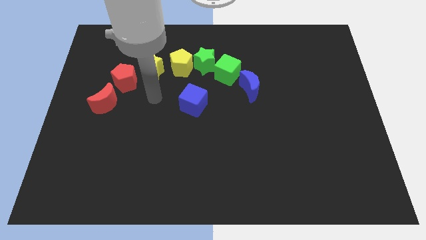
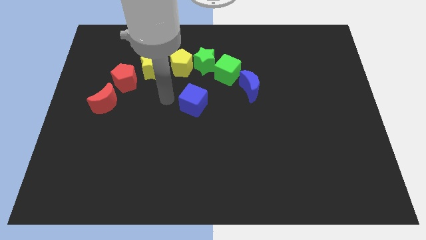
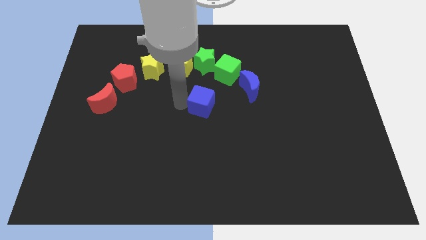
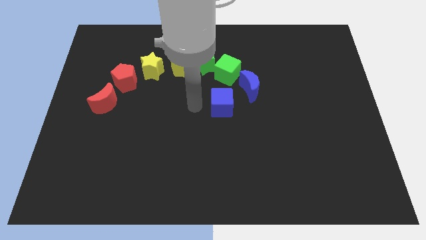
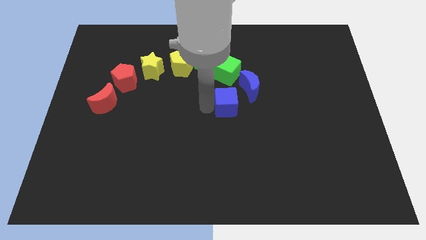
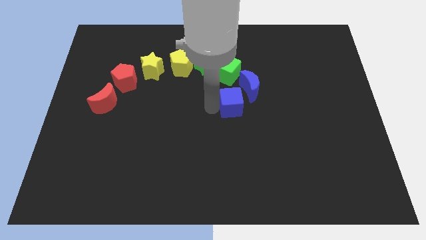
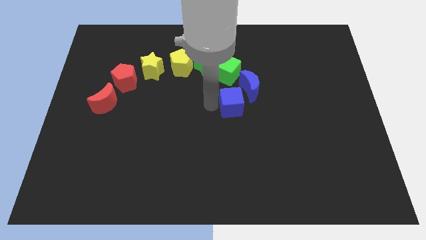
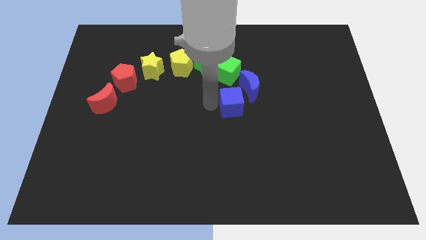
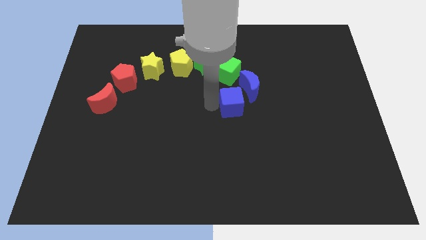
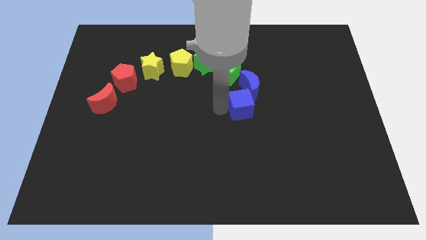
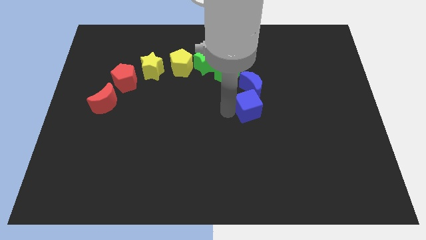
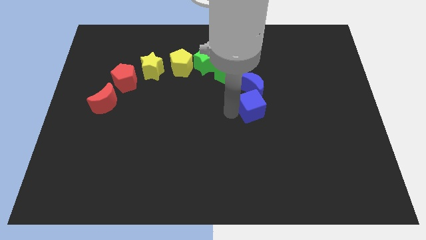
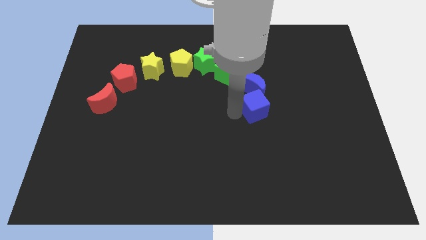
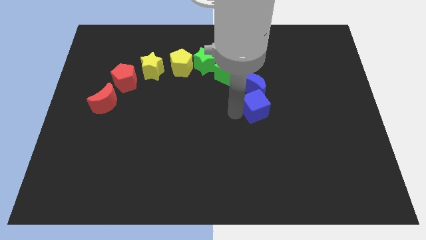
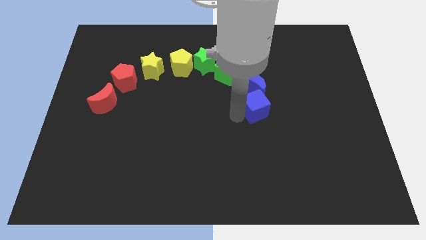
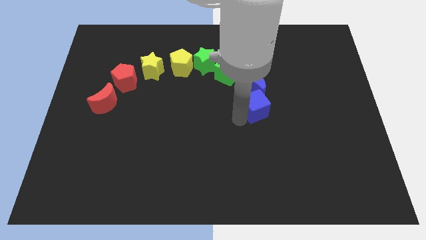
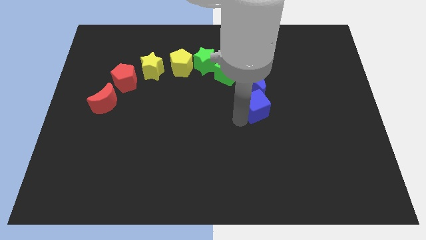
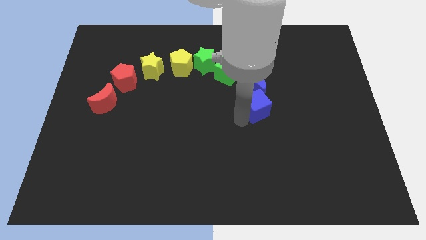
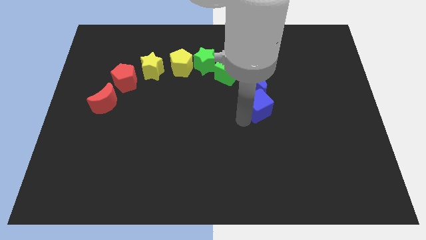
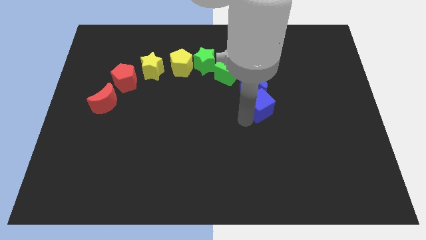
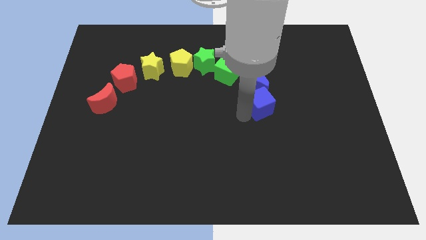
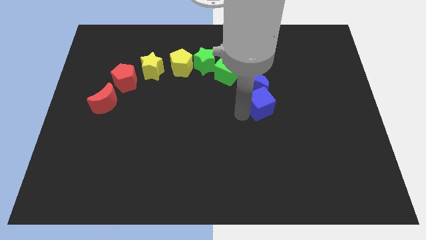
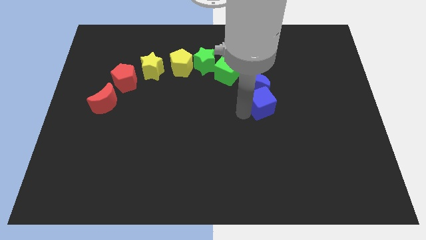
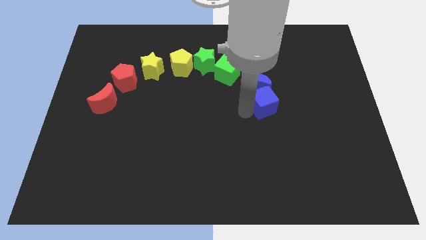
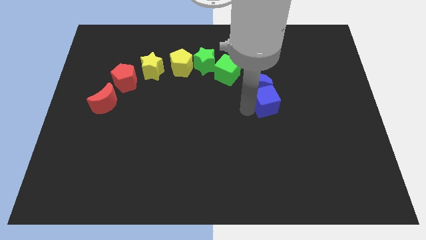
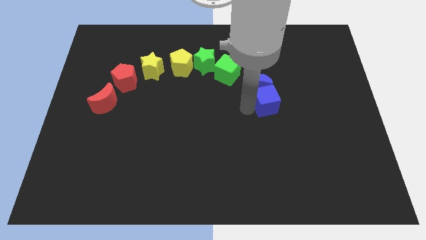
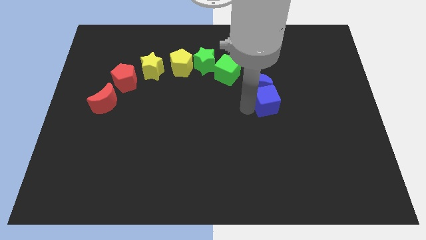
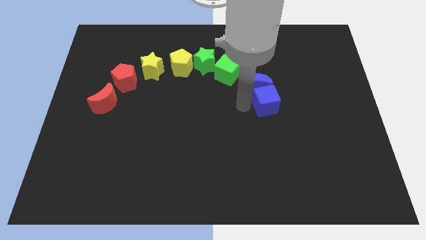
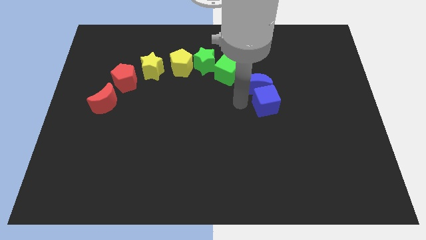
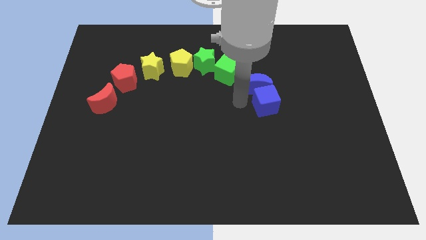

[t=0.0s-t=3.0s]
move the blue cube into the blue crescent

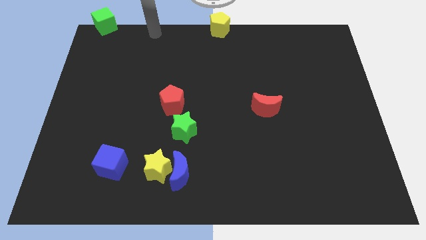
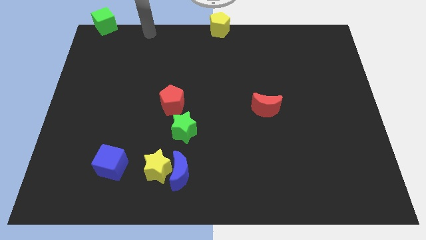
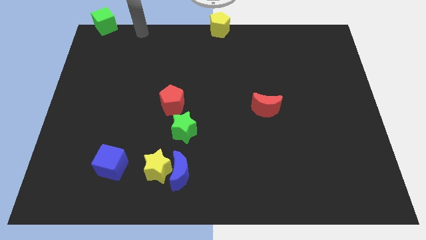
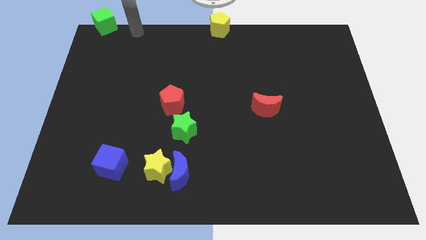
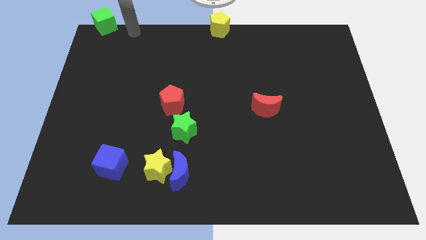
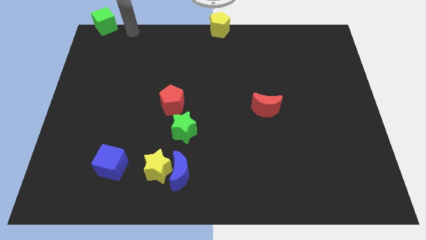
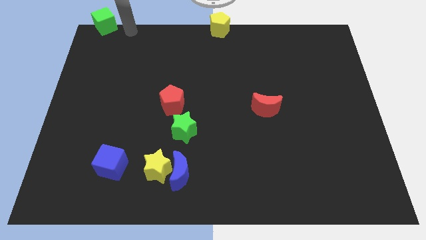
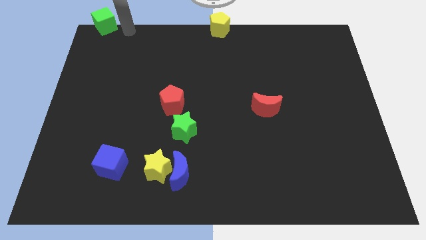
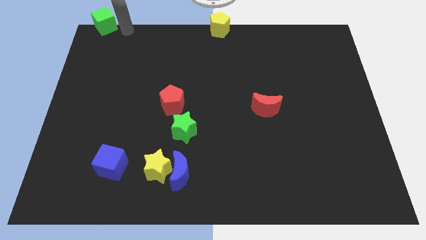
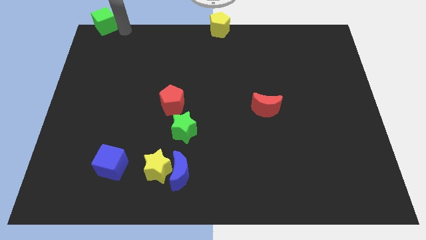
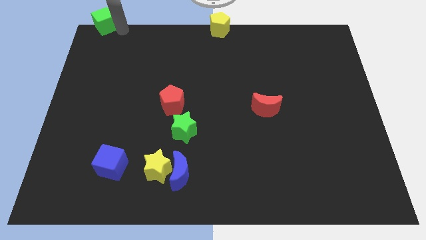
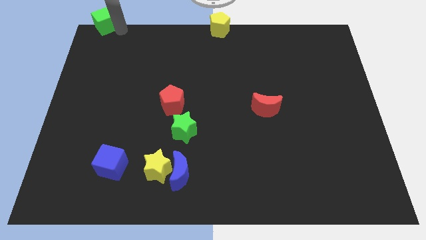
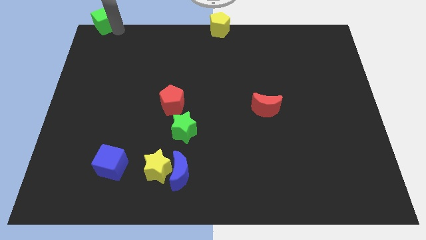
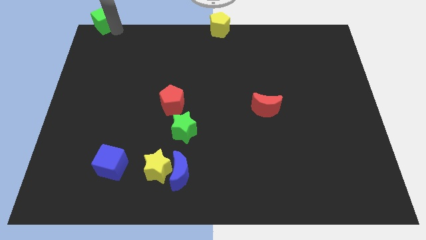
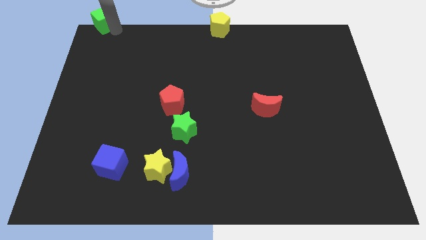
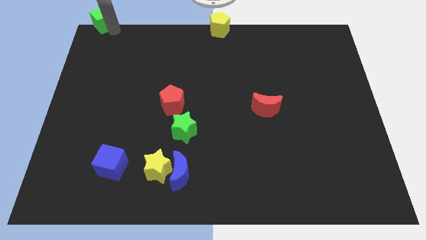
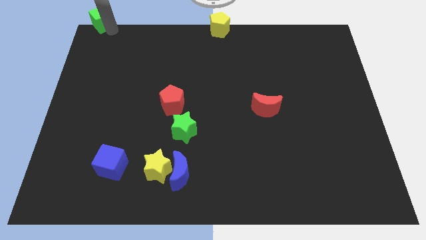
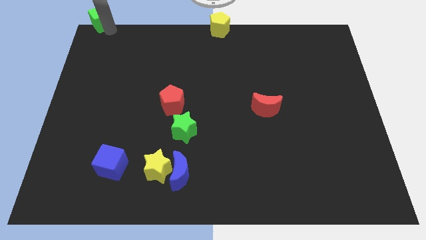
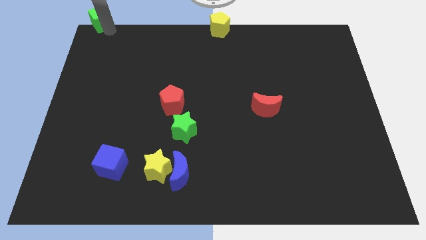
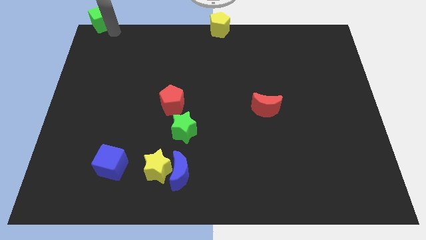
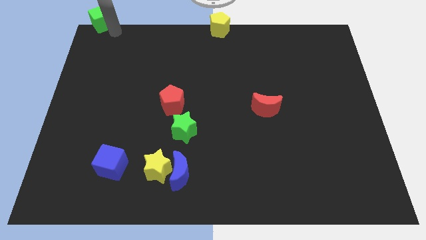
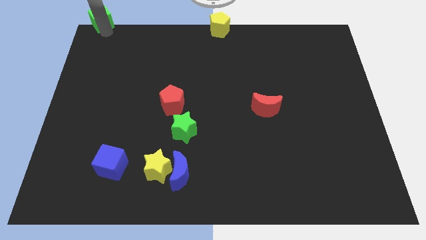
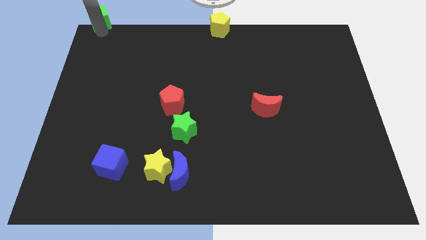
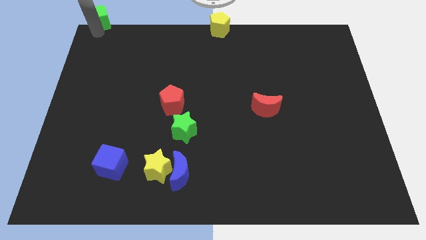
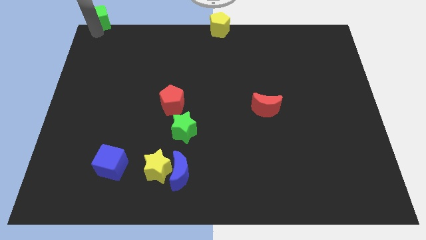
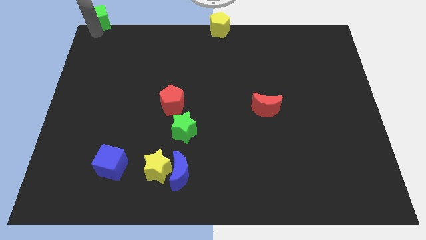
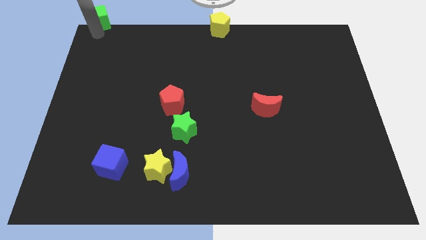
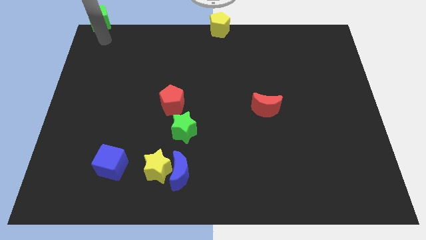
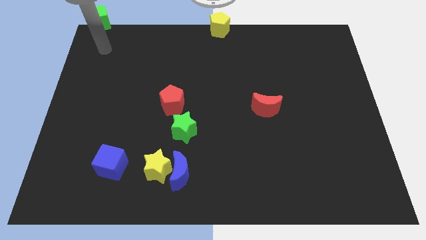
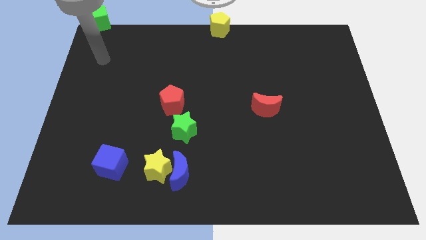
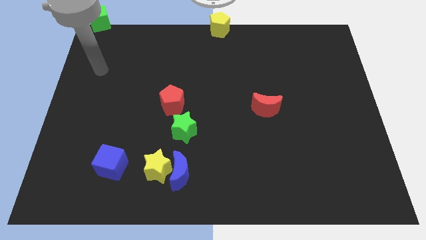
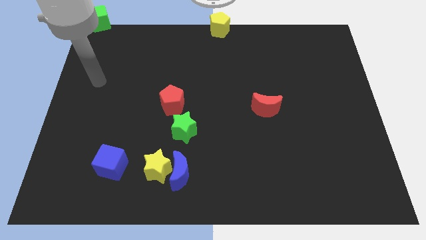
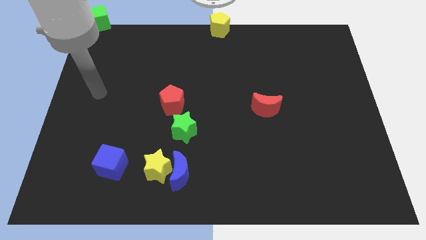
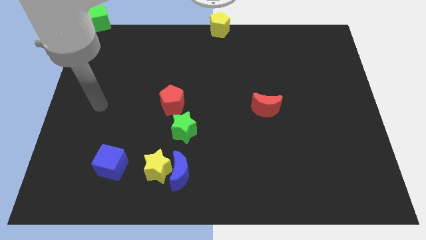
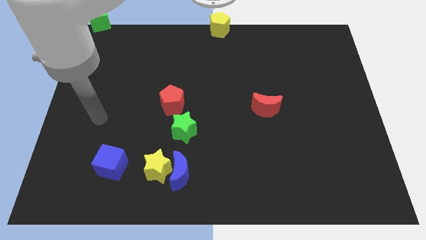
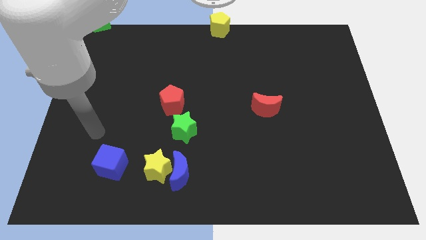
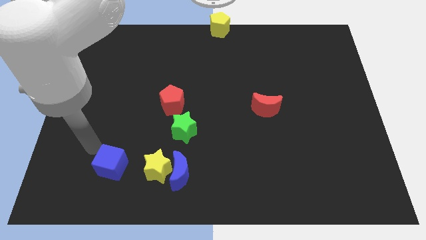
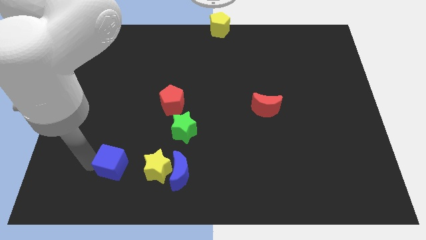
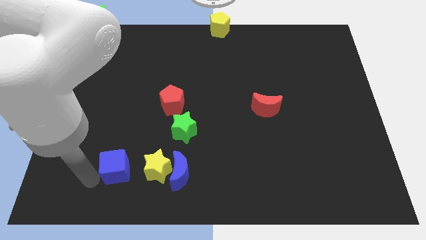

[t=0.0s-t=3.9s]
move the arm towards the blue cube

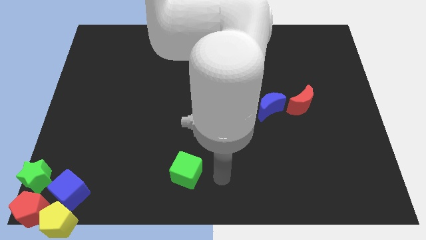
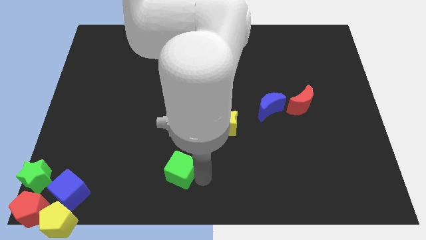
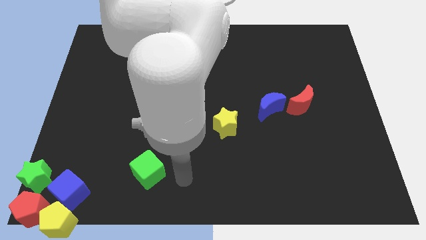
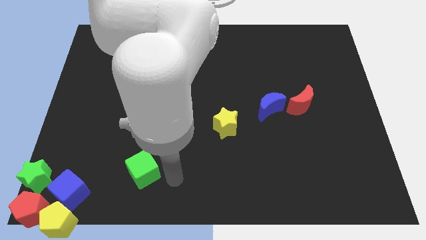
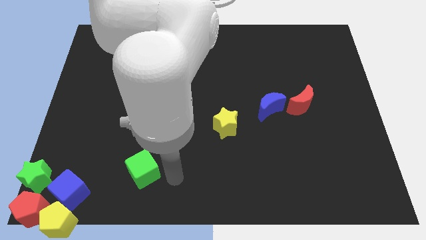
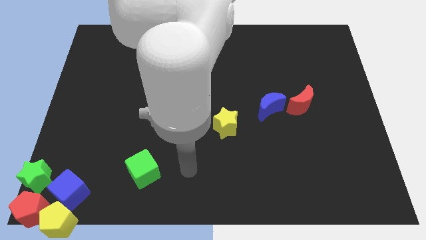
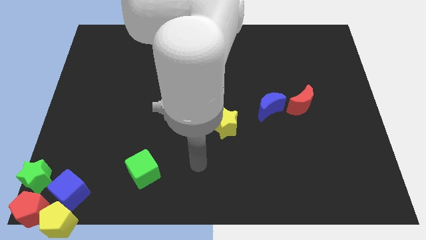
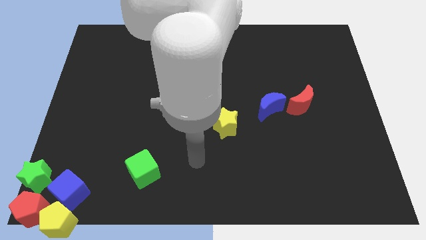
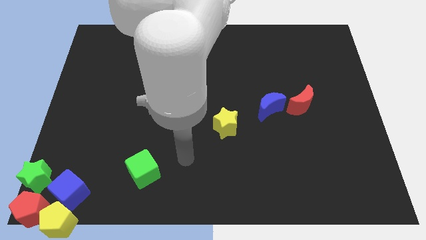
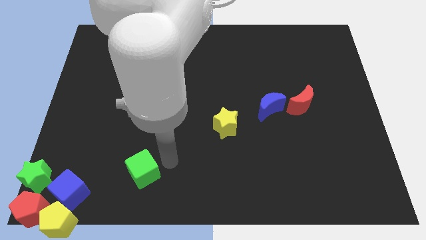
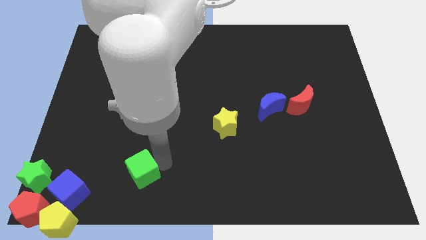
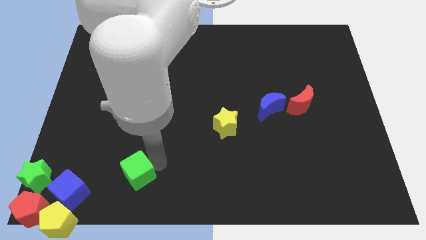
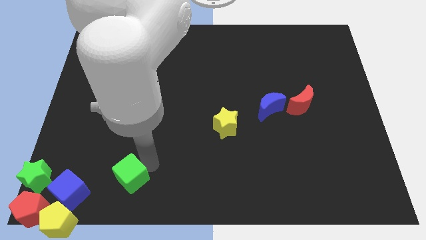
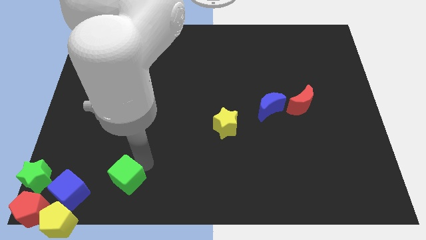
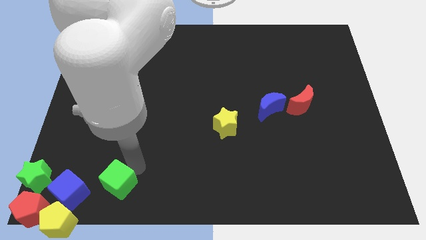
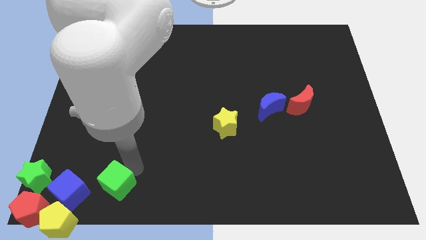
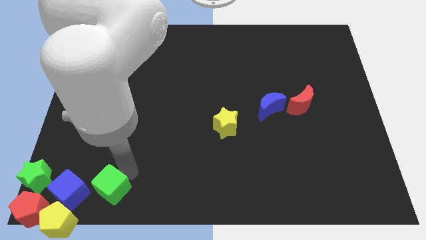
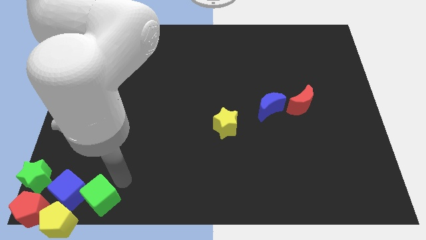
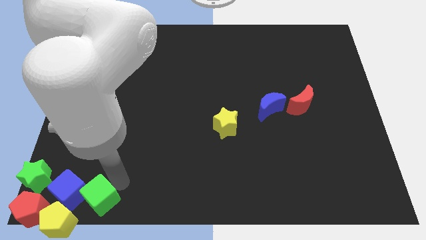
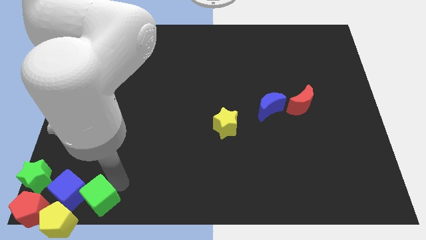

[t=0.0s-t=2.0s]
move the green cube bottom left corner of the board towards the blue cube

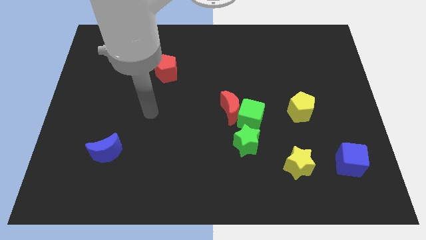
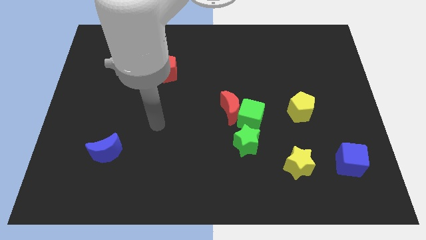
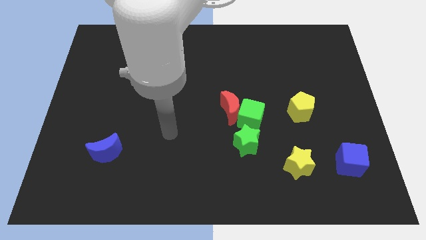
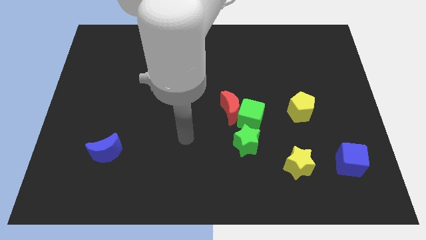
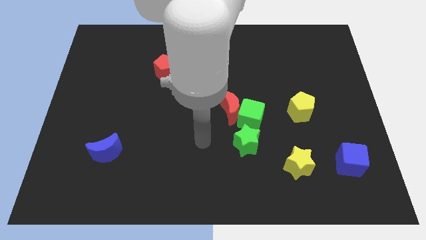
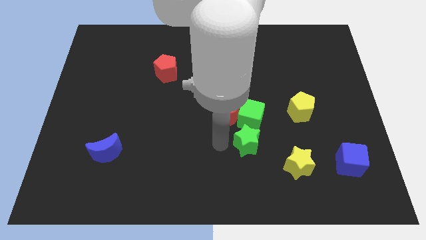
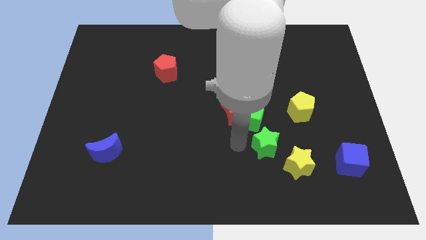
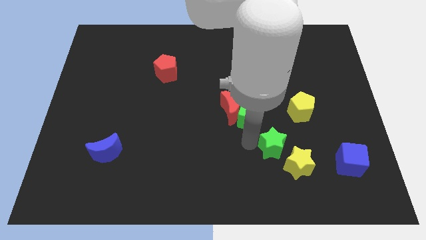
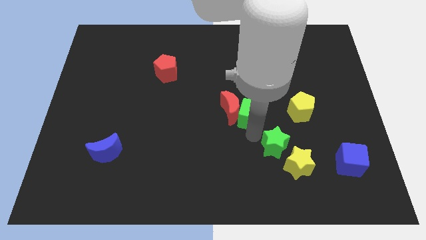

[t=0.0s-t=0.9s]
put the green star in between the yellow star and green cube diagonally
